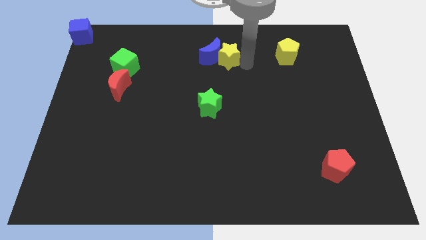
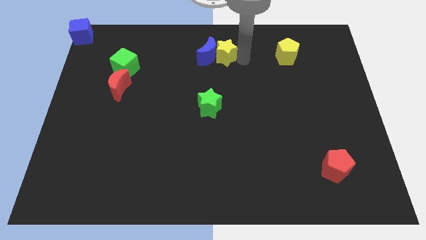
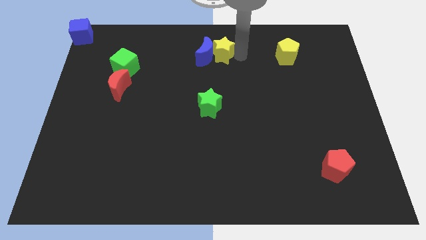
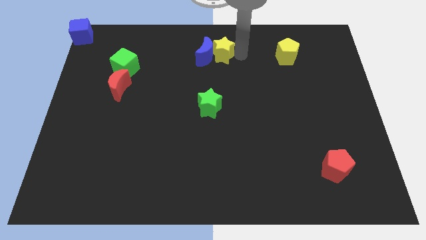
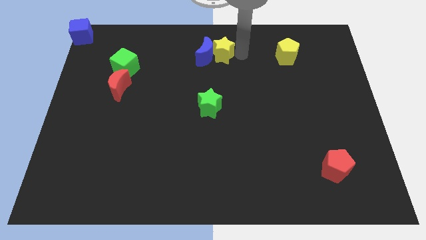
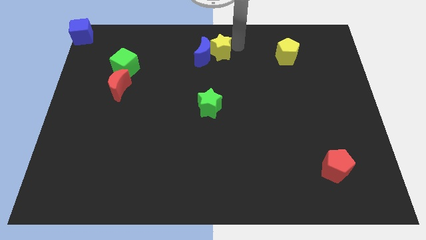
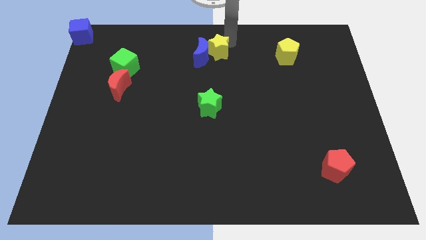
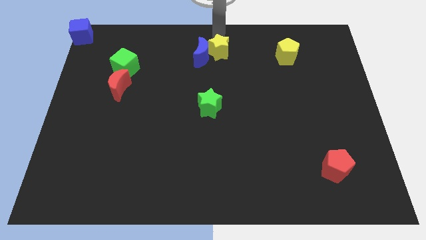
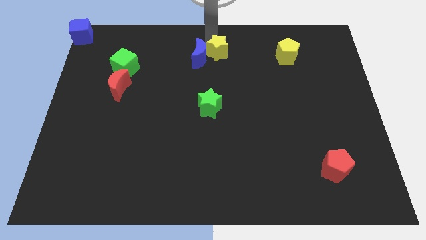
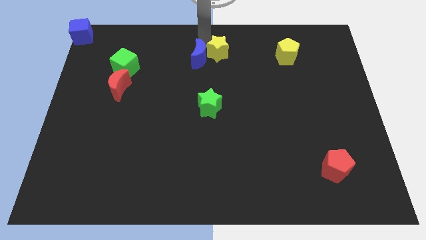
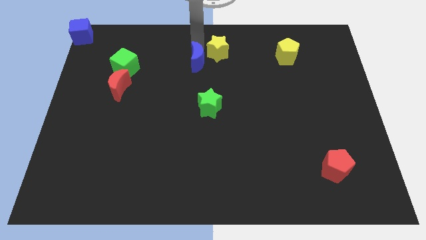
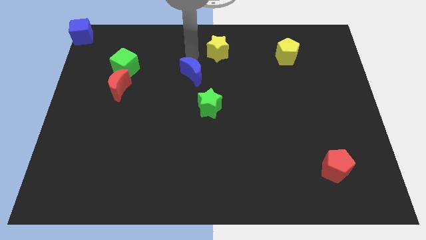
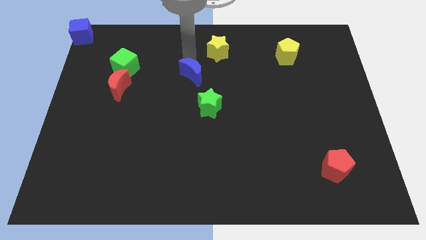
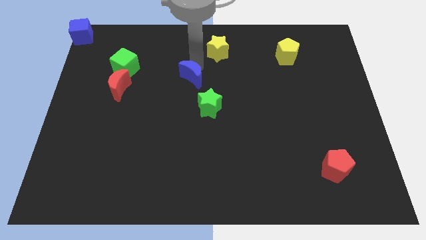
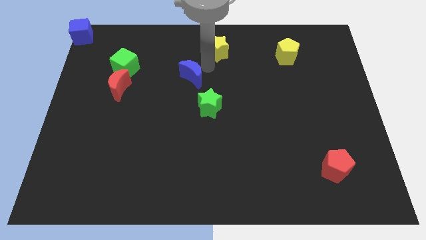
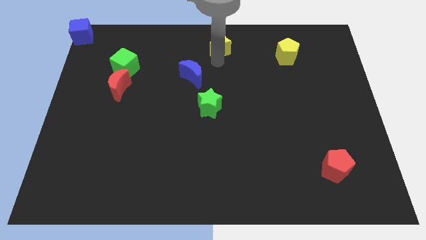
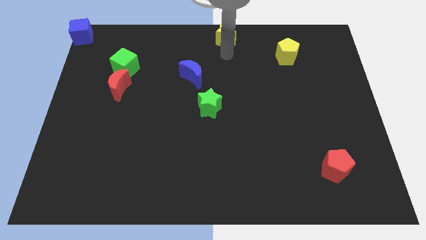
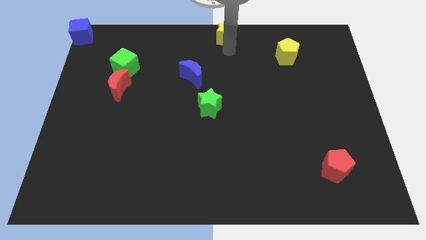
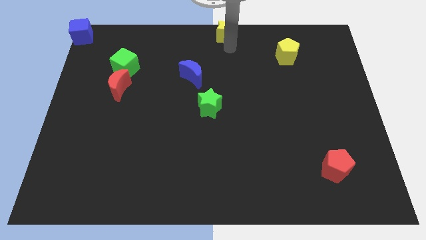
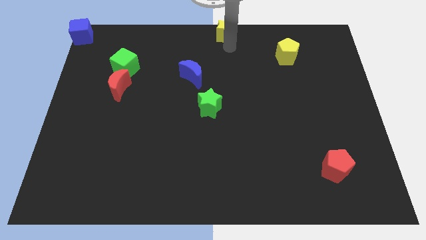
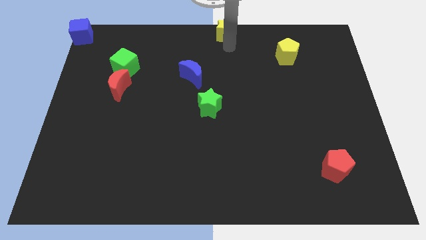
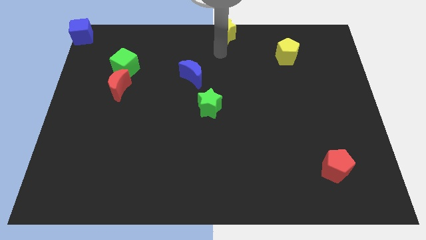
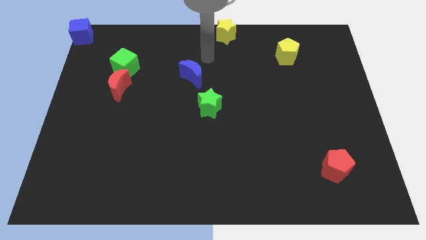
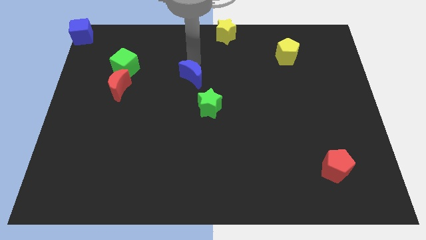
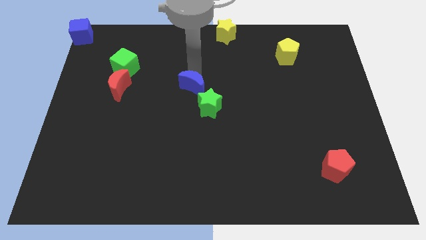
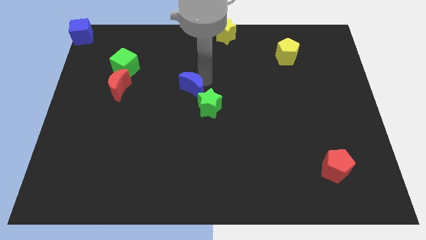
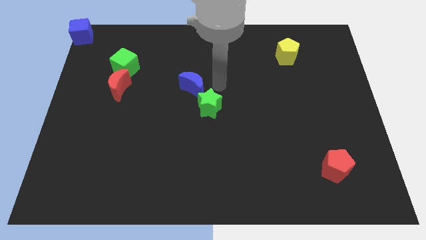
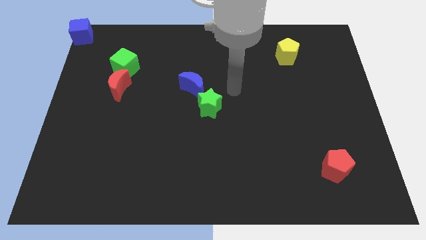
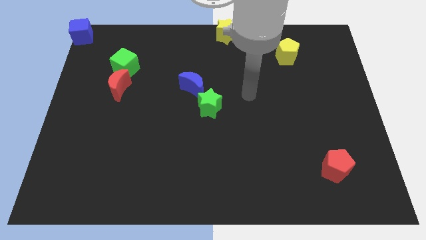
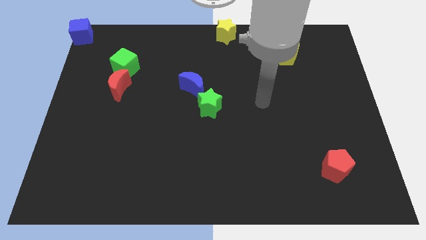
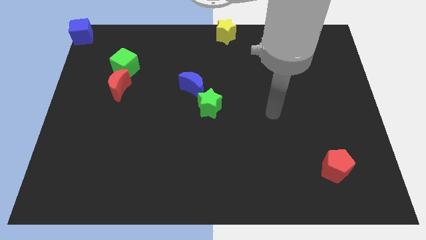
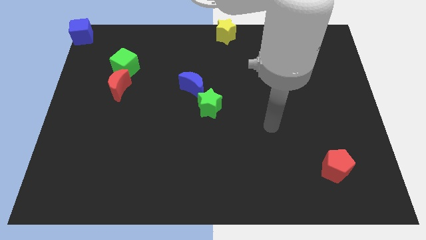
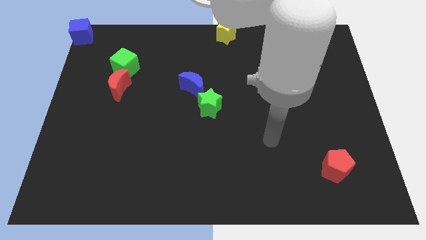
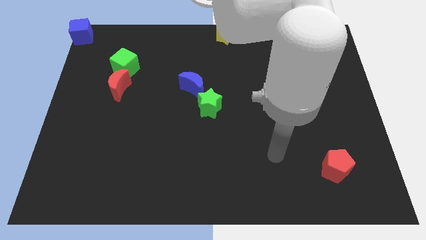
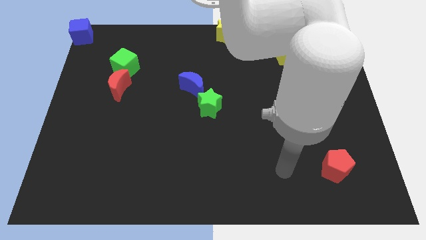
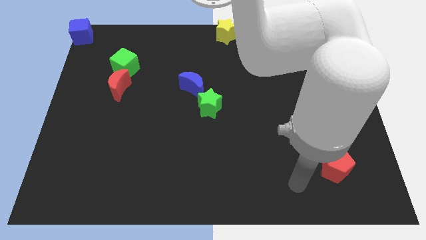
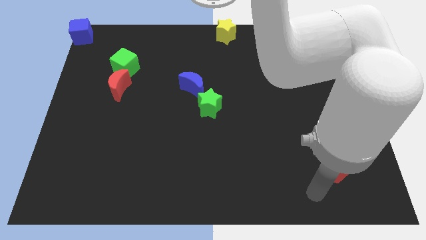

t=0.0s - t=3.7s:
push the blue moon and the yellow star away from each other

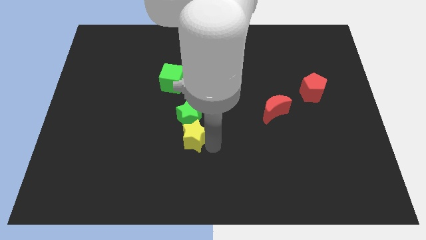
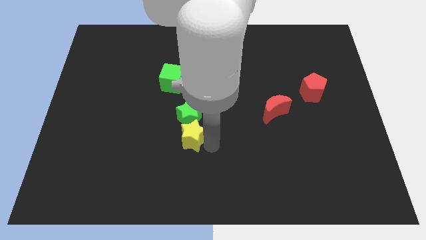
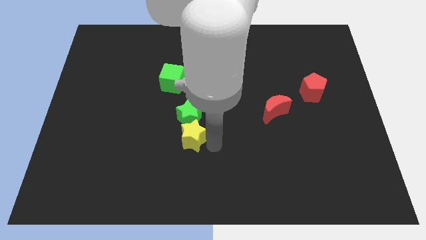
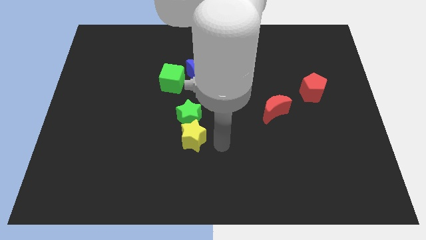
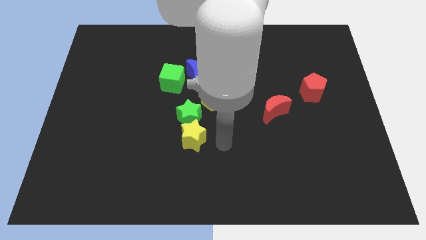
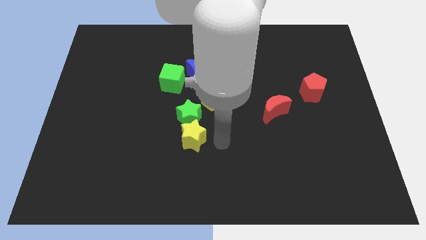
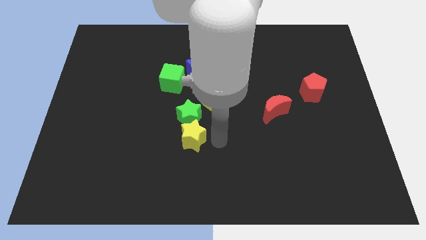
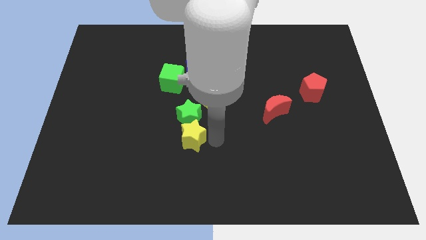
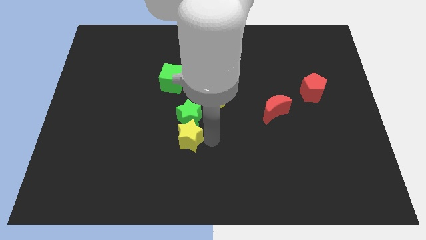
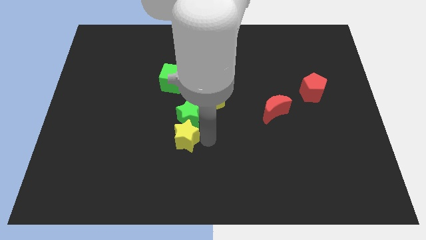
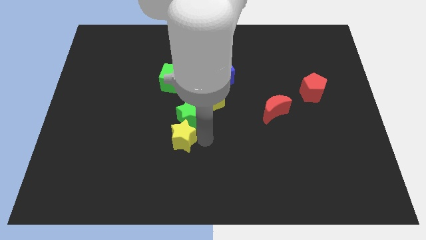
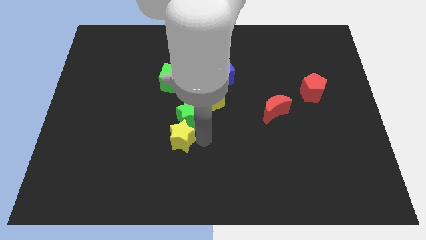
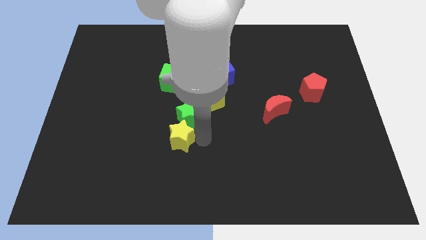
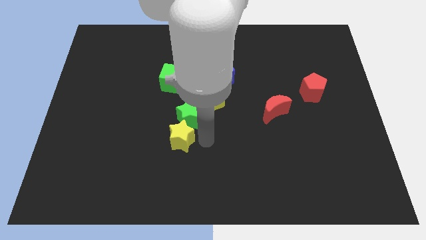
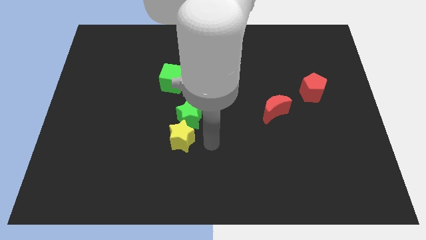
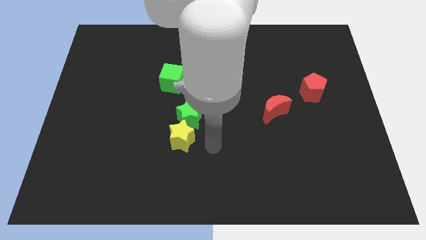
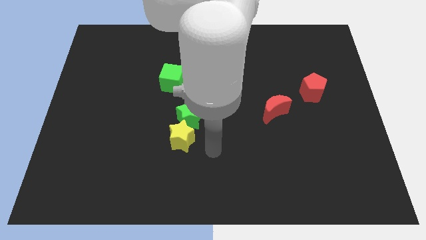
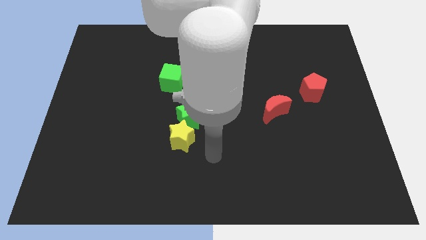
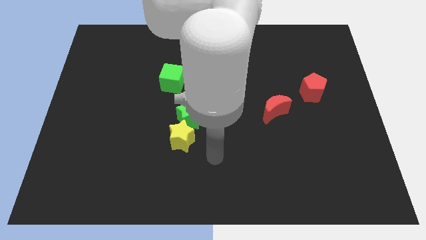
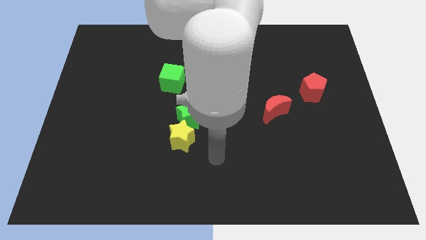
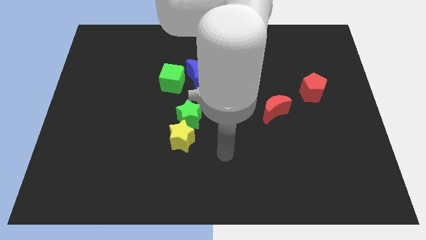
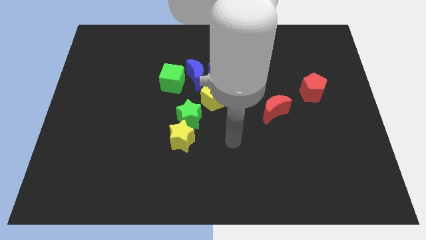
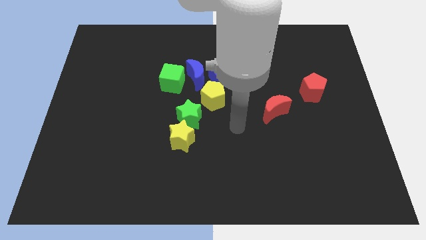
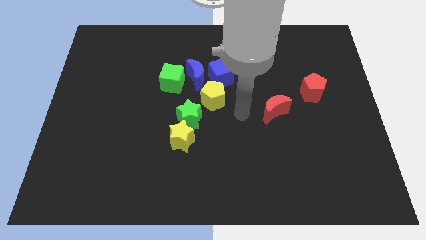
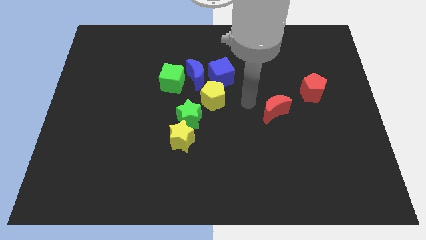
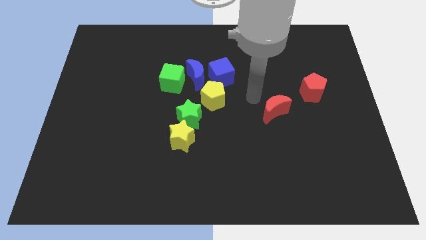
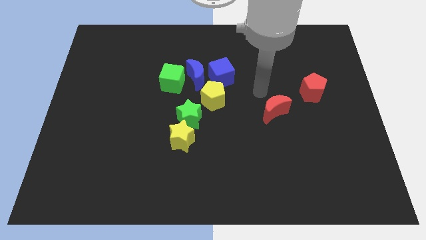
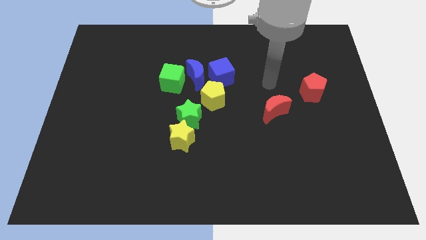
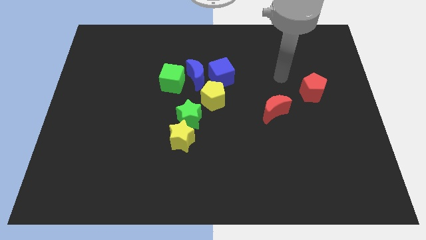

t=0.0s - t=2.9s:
put the yellow star at the bottom of the green star

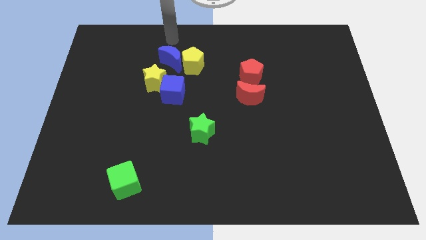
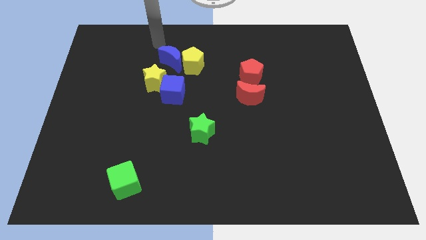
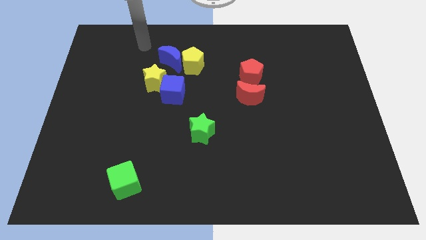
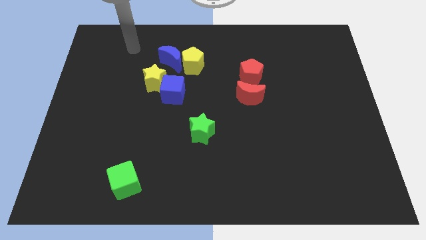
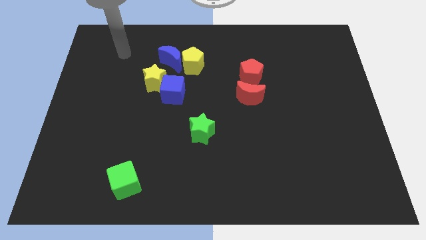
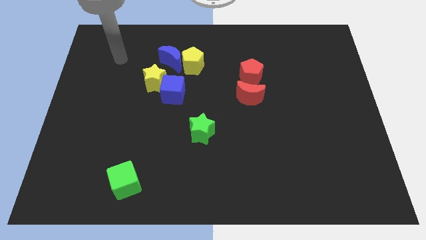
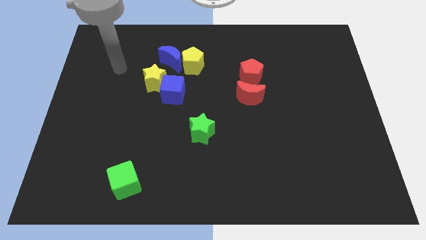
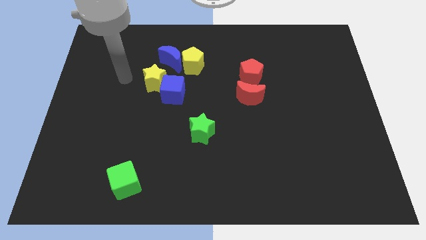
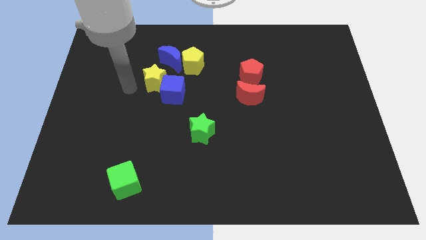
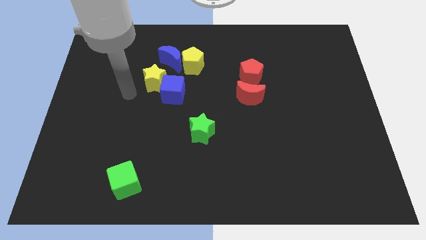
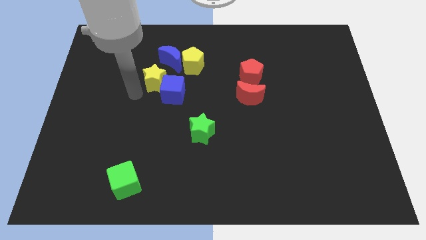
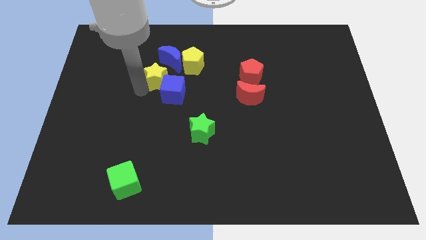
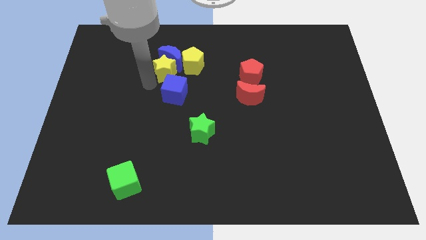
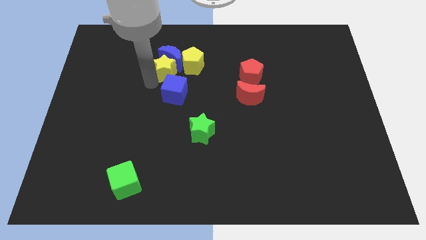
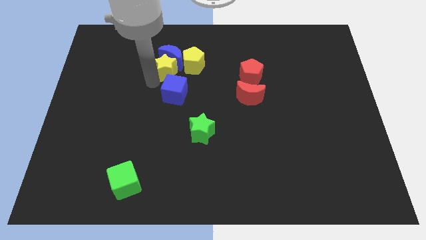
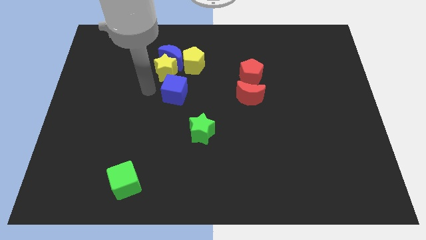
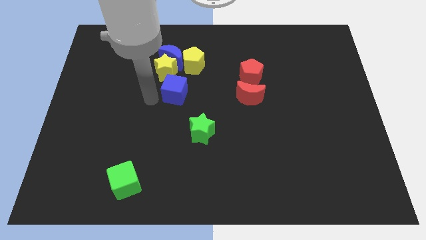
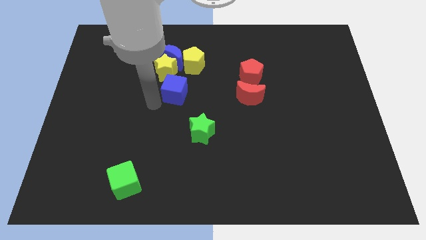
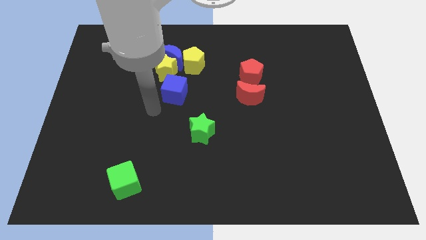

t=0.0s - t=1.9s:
push the yellow star towards bottom of blue moon

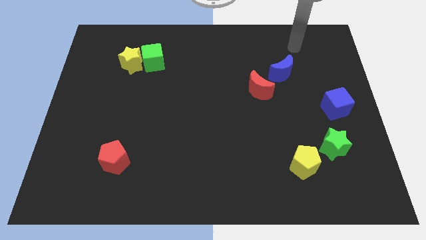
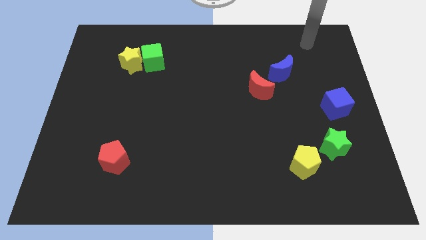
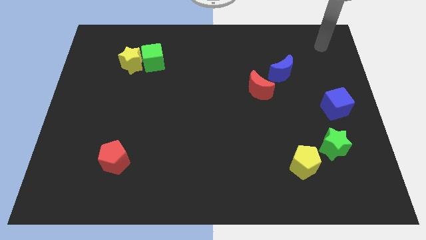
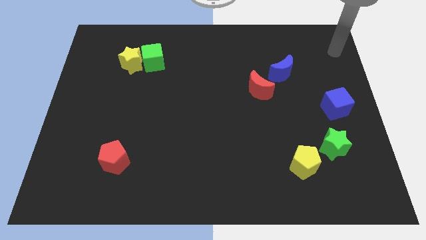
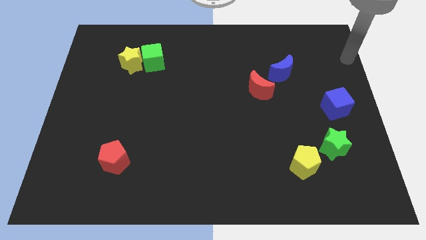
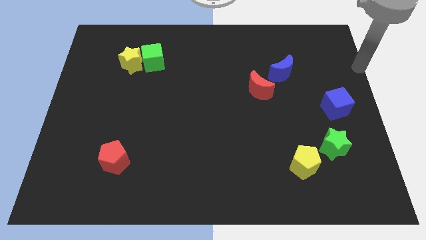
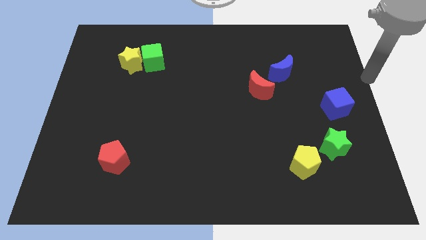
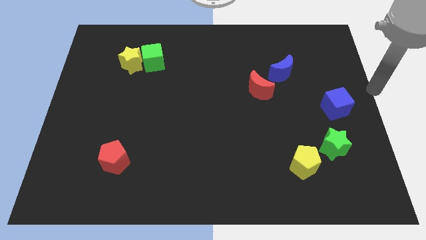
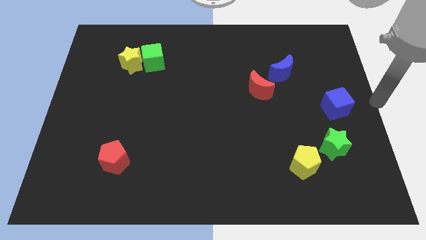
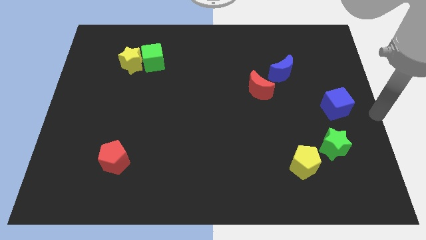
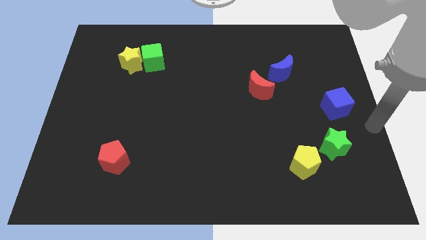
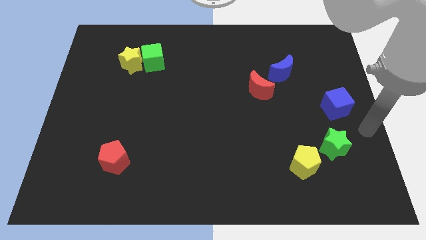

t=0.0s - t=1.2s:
move your arm away from the blue moon
